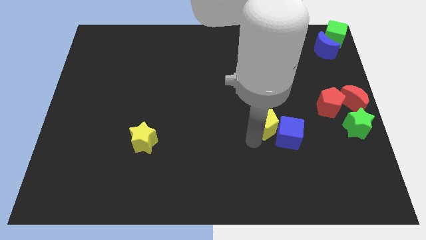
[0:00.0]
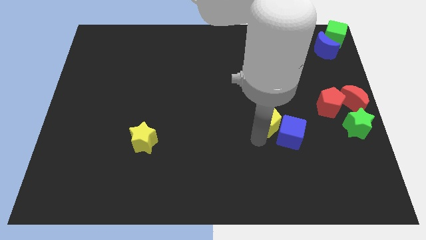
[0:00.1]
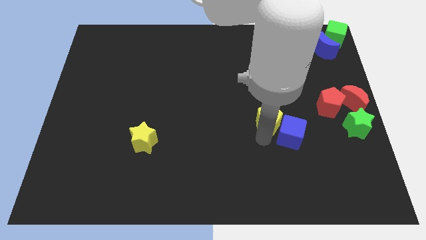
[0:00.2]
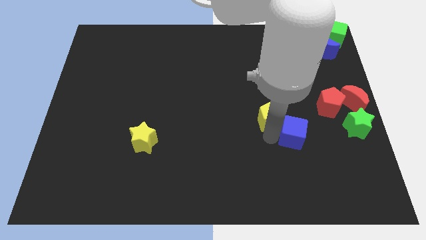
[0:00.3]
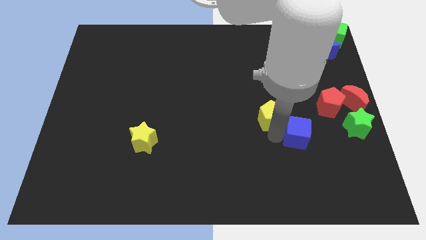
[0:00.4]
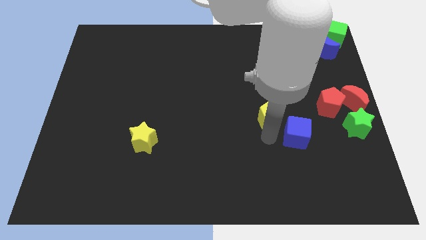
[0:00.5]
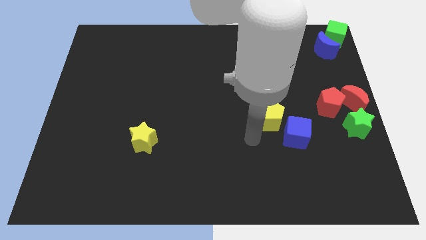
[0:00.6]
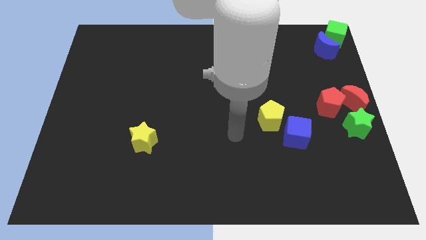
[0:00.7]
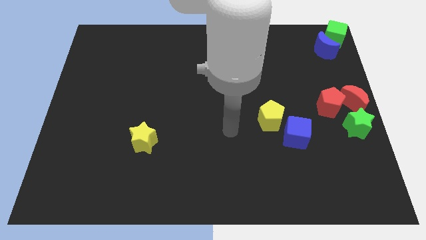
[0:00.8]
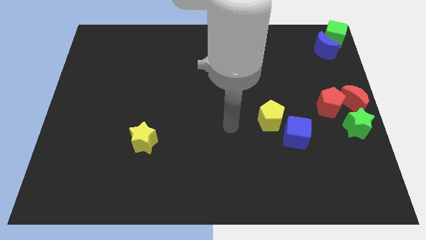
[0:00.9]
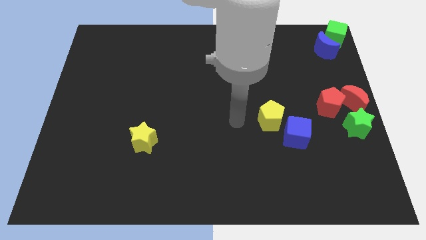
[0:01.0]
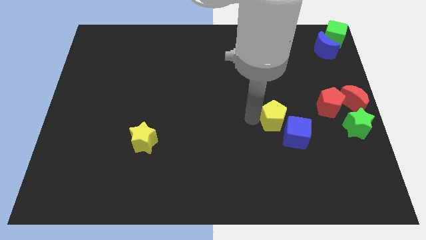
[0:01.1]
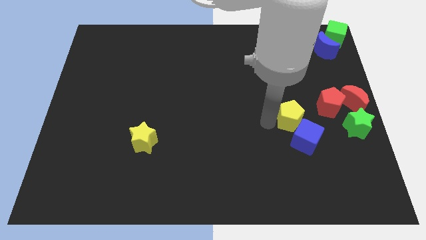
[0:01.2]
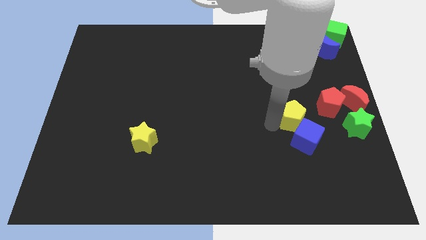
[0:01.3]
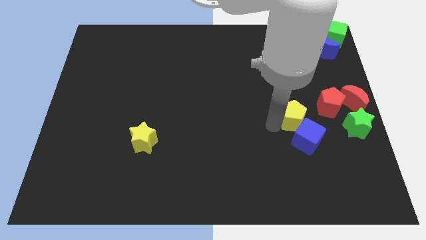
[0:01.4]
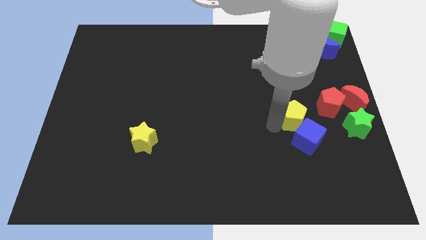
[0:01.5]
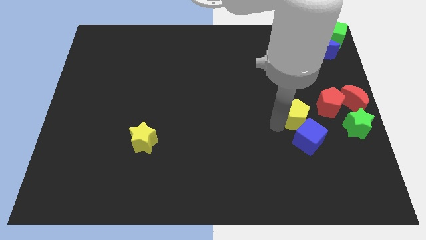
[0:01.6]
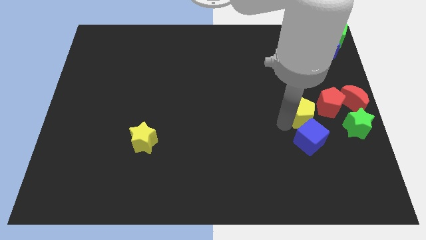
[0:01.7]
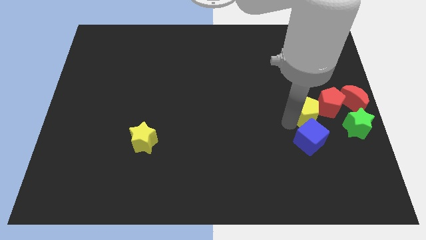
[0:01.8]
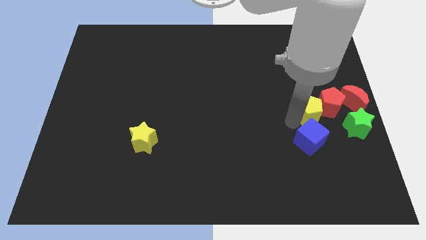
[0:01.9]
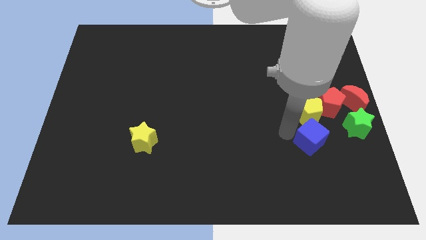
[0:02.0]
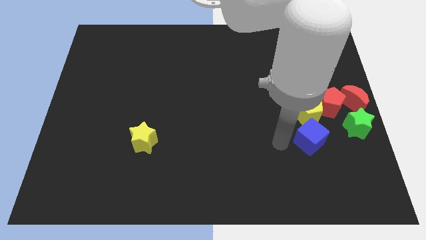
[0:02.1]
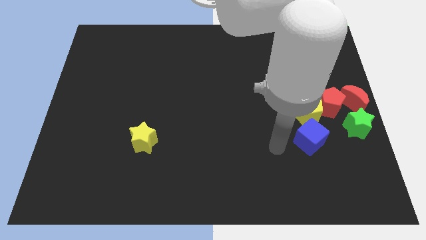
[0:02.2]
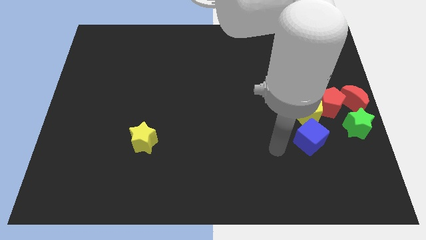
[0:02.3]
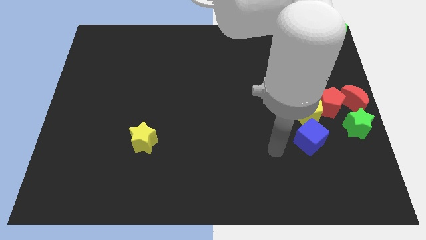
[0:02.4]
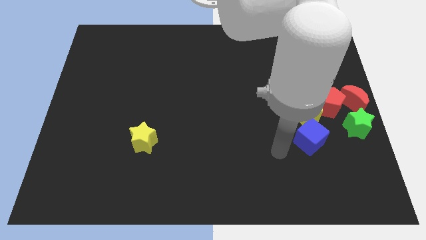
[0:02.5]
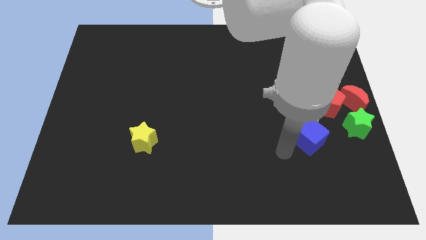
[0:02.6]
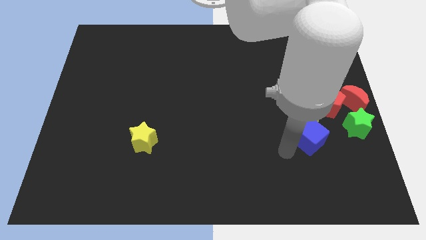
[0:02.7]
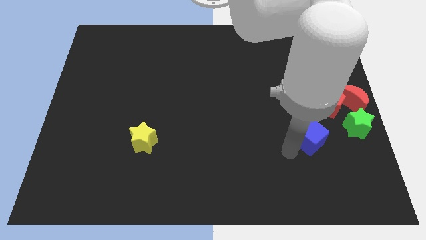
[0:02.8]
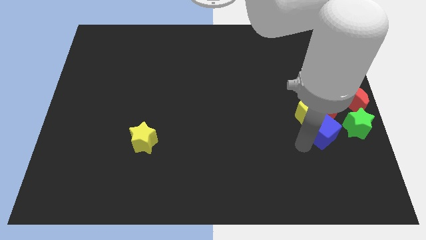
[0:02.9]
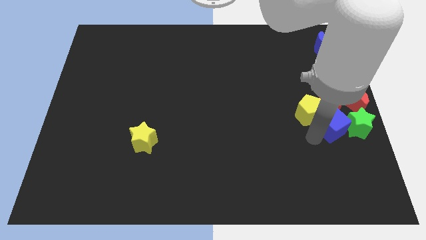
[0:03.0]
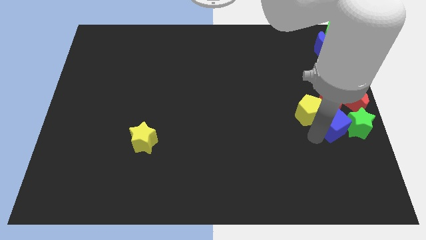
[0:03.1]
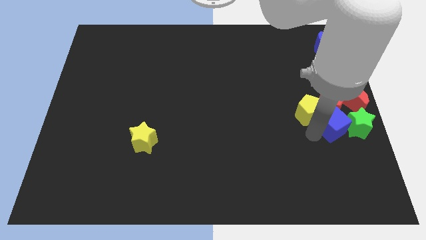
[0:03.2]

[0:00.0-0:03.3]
push the yellow pentagon and blue cube into the group of blocks

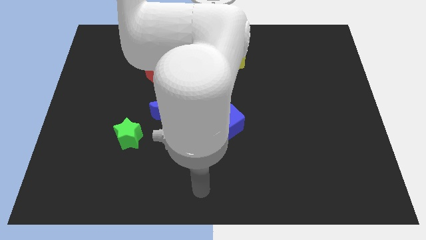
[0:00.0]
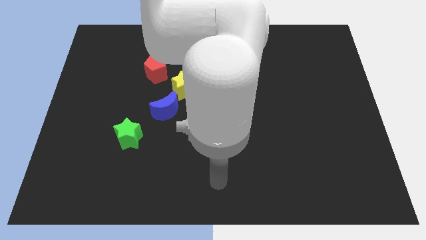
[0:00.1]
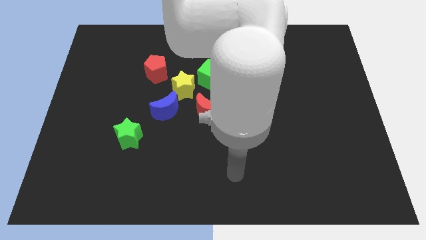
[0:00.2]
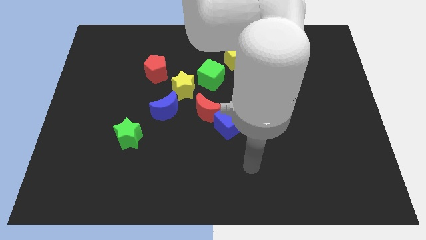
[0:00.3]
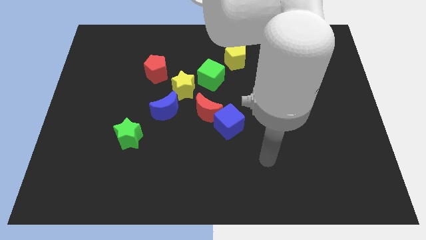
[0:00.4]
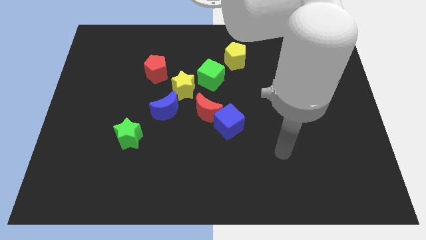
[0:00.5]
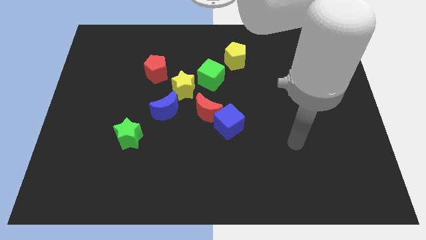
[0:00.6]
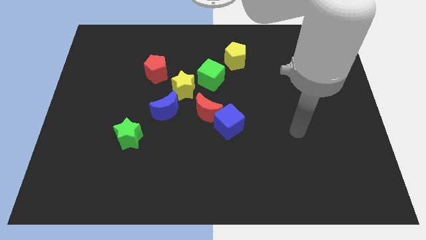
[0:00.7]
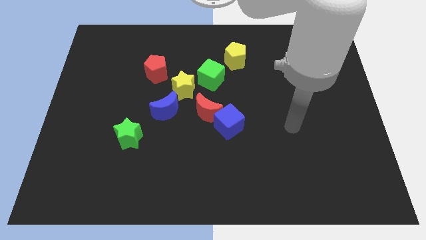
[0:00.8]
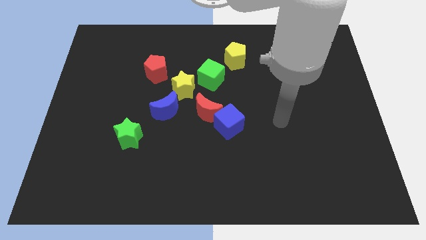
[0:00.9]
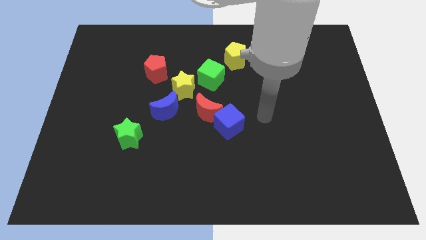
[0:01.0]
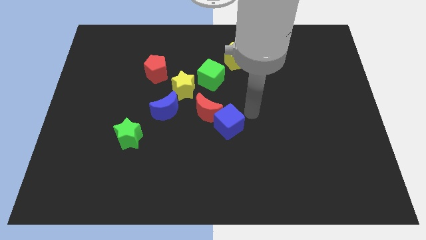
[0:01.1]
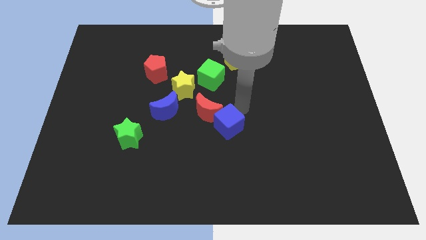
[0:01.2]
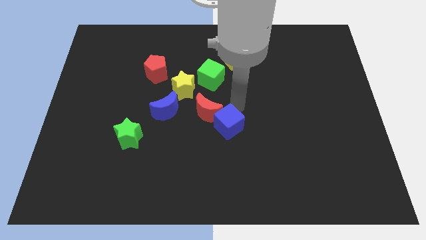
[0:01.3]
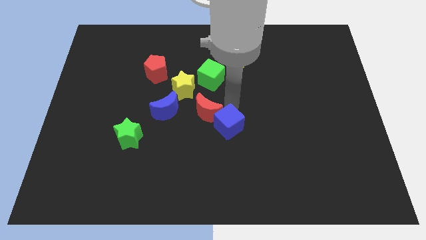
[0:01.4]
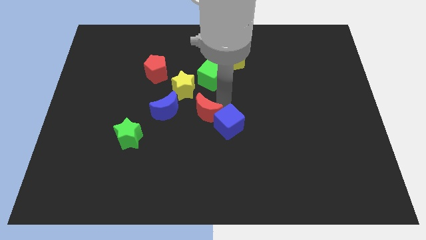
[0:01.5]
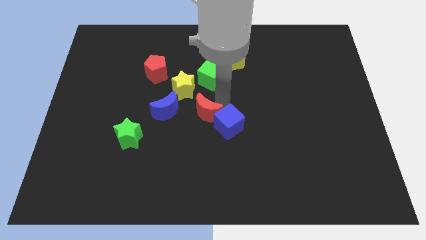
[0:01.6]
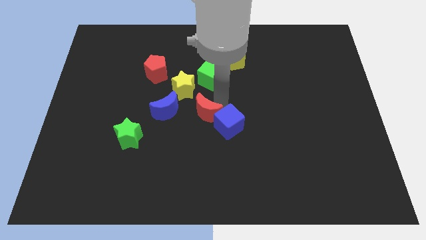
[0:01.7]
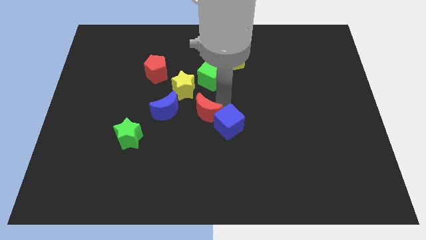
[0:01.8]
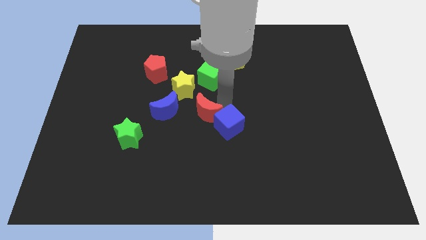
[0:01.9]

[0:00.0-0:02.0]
move your arm to the center of the board

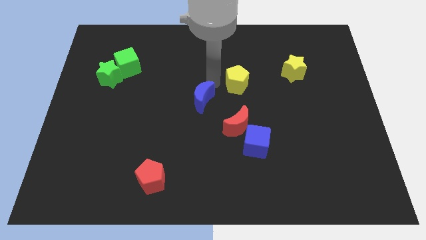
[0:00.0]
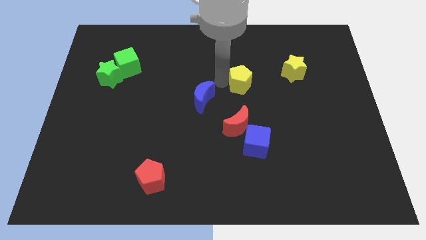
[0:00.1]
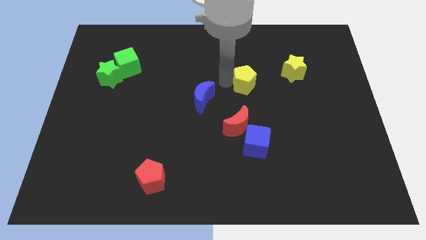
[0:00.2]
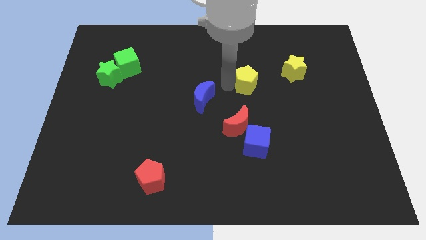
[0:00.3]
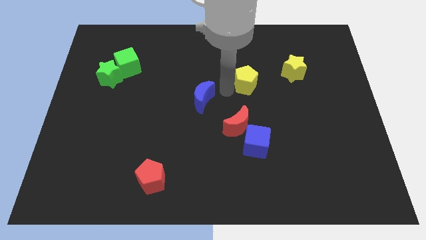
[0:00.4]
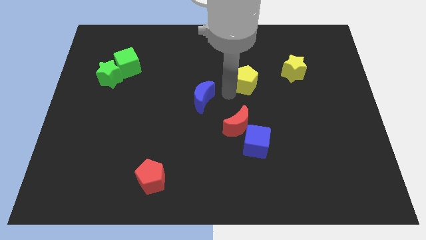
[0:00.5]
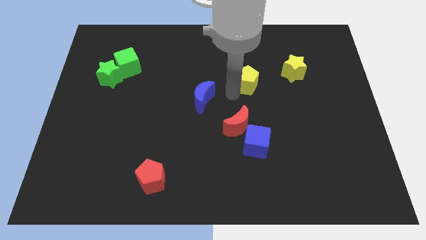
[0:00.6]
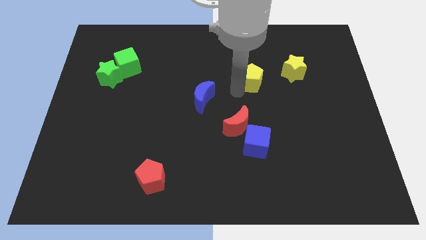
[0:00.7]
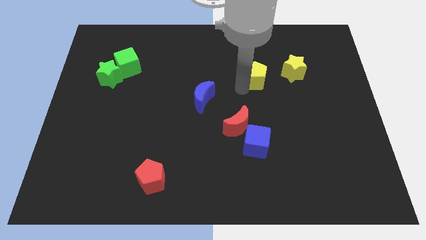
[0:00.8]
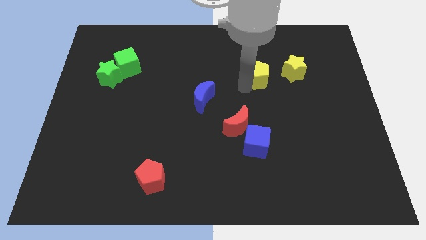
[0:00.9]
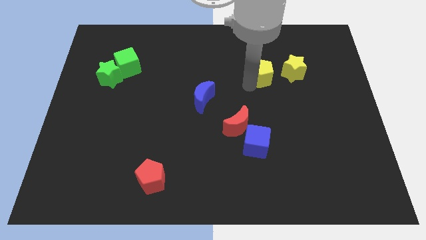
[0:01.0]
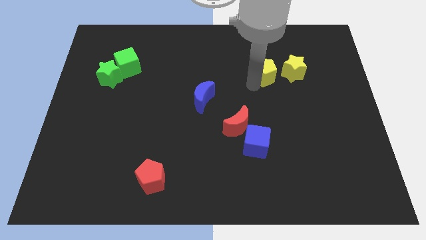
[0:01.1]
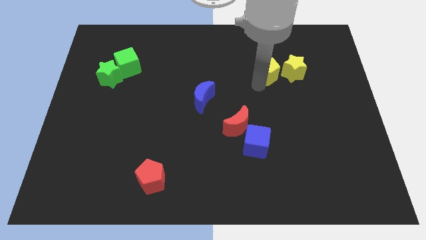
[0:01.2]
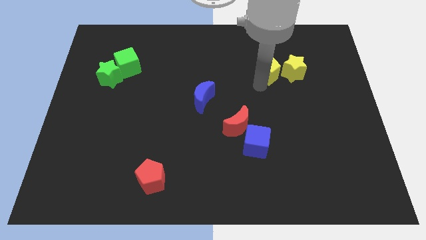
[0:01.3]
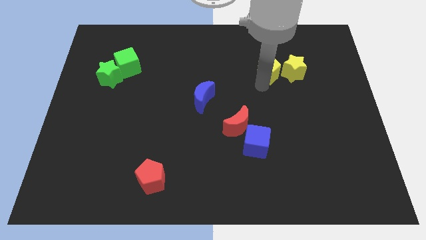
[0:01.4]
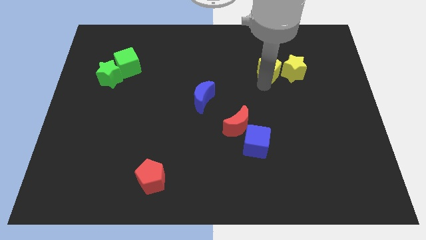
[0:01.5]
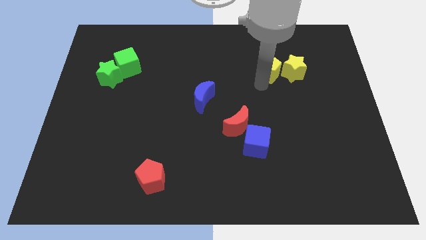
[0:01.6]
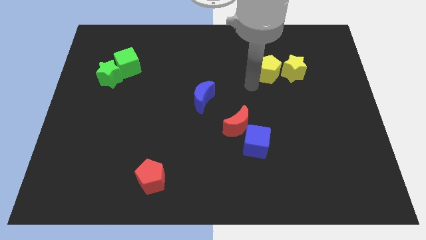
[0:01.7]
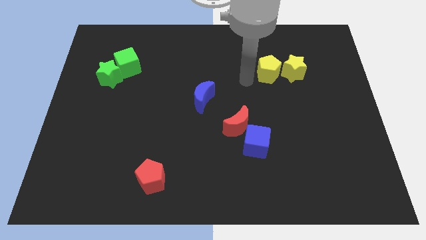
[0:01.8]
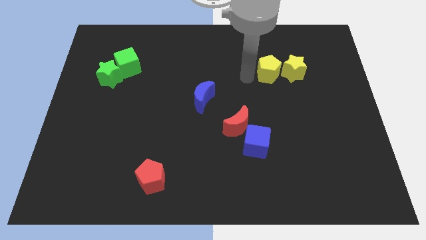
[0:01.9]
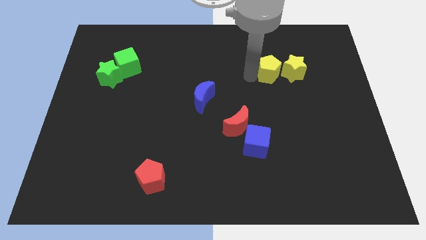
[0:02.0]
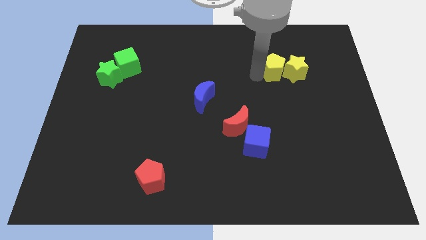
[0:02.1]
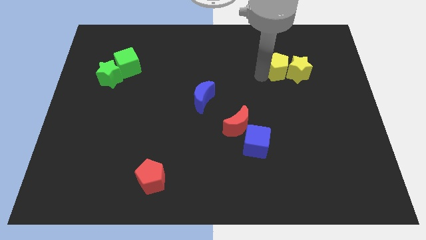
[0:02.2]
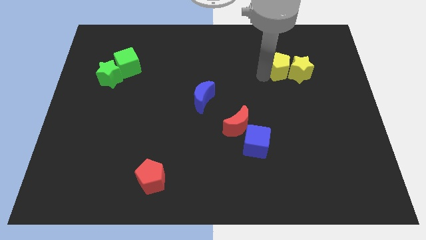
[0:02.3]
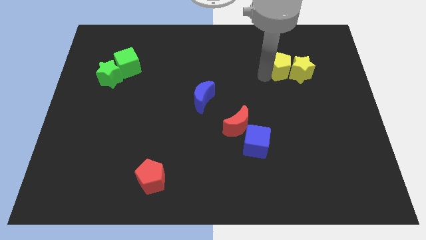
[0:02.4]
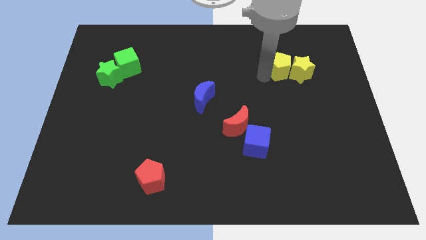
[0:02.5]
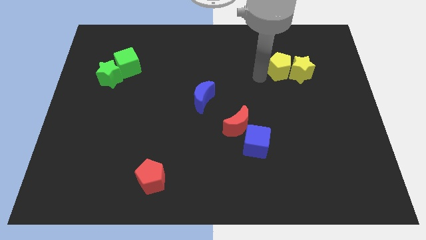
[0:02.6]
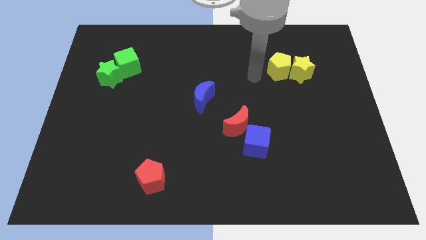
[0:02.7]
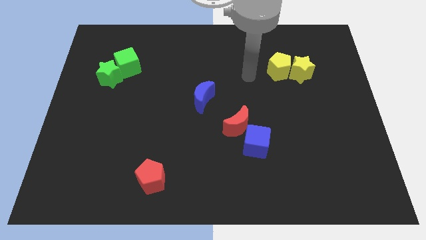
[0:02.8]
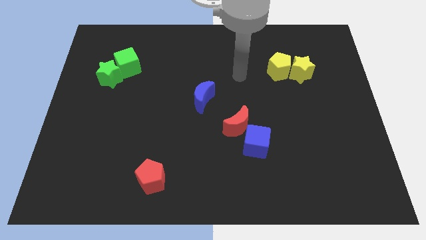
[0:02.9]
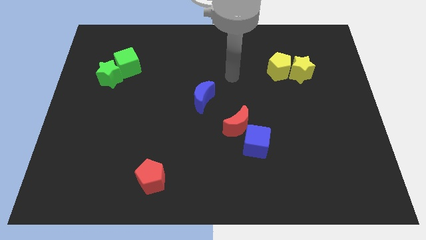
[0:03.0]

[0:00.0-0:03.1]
push the yellow pentagon into the yellow star

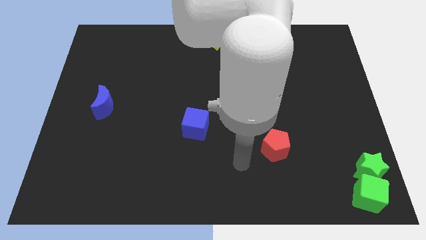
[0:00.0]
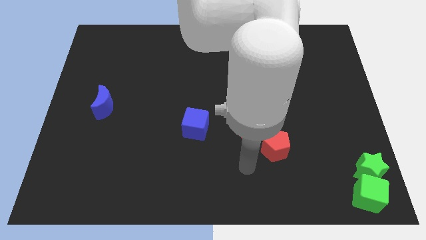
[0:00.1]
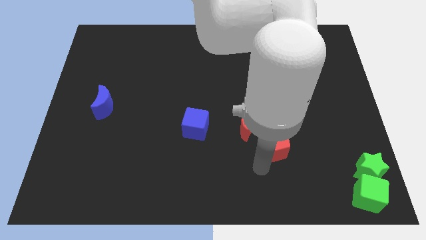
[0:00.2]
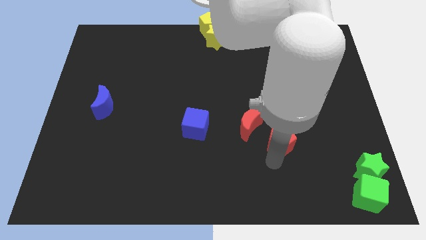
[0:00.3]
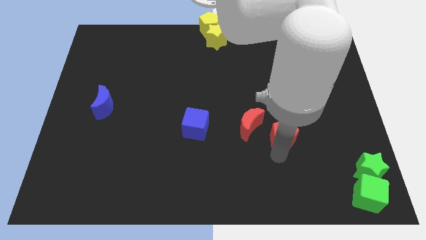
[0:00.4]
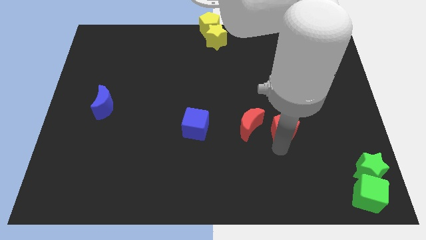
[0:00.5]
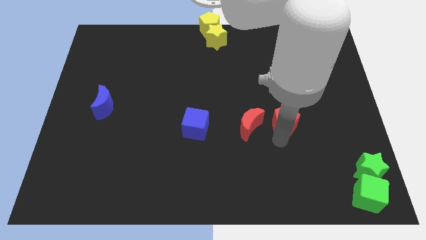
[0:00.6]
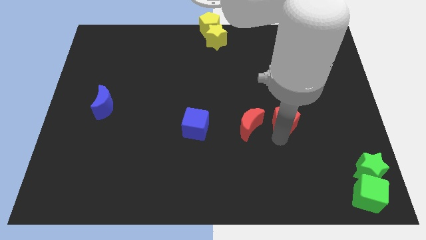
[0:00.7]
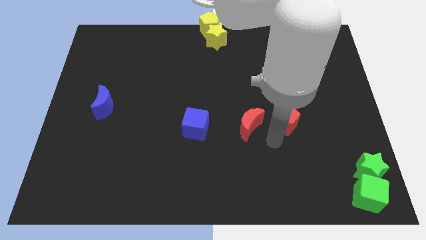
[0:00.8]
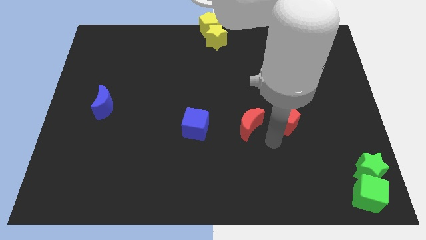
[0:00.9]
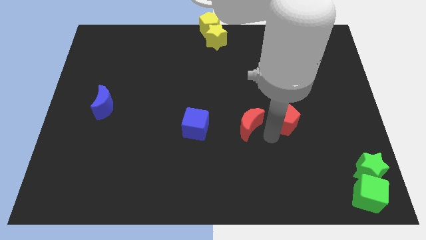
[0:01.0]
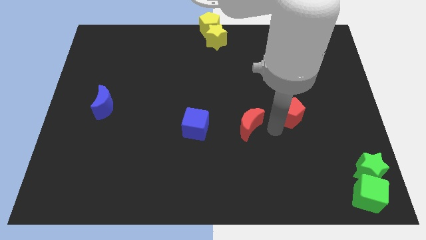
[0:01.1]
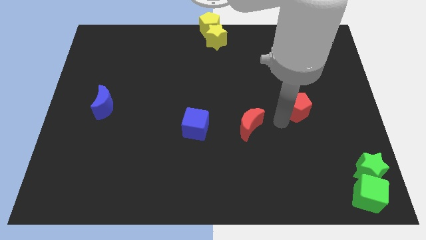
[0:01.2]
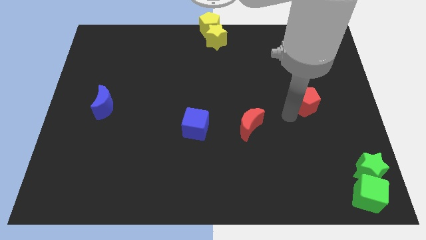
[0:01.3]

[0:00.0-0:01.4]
move red pentagon slightly up
